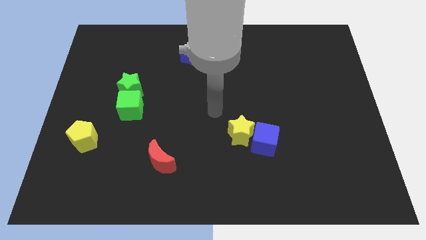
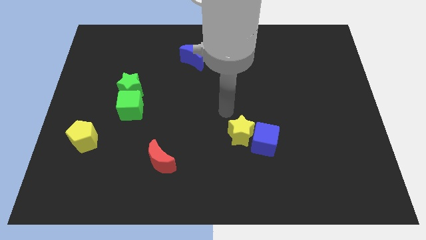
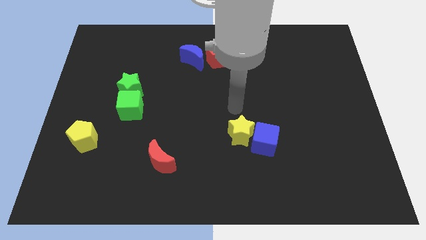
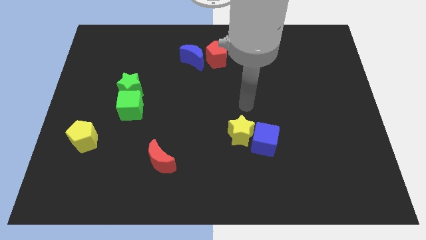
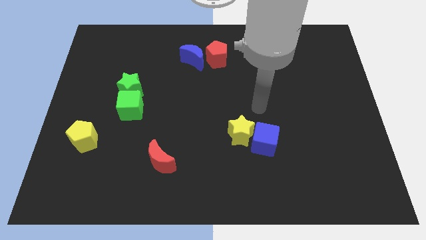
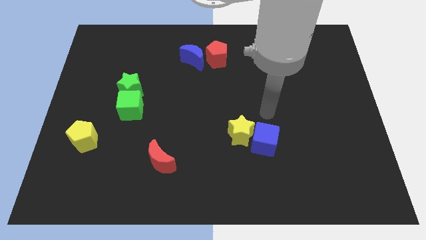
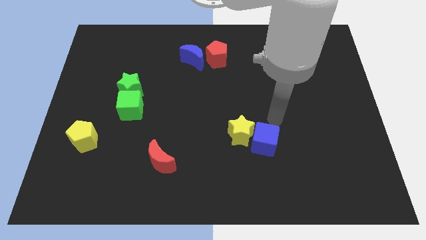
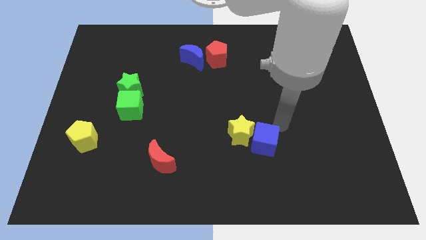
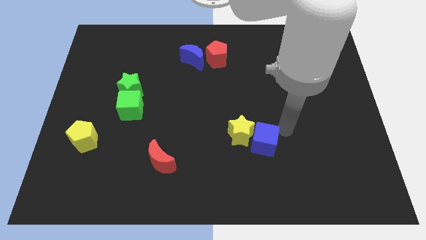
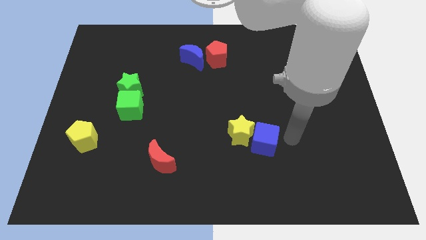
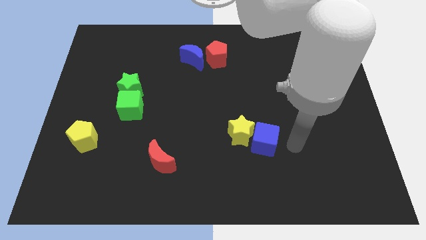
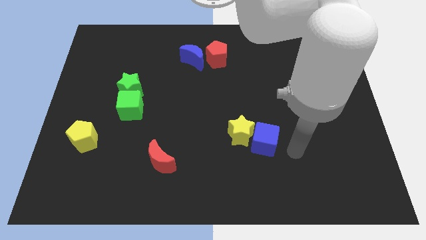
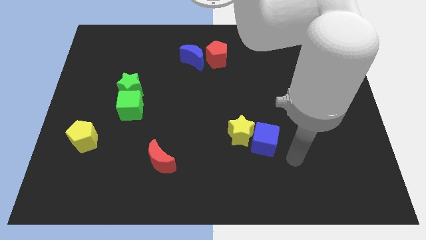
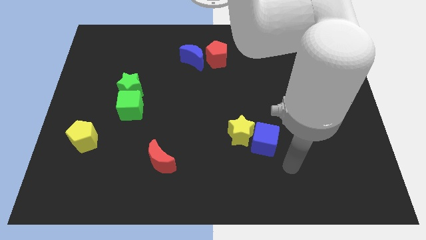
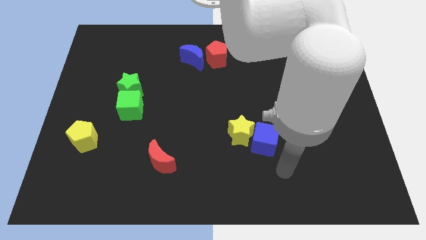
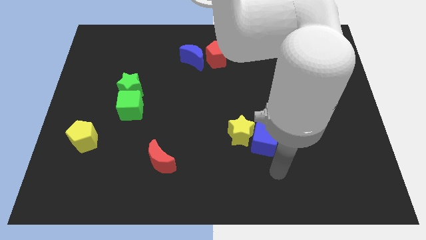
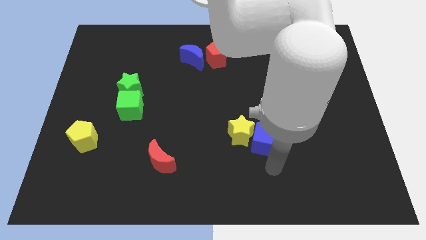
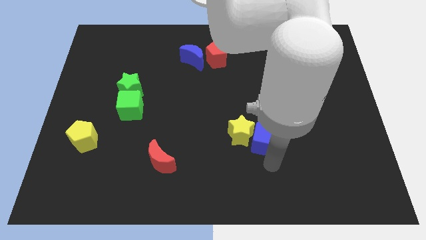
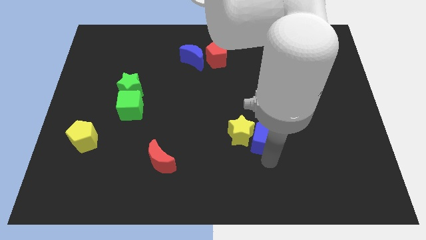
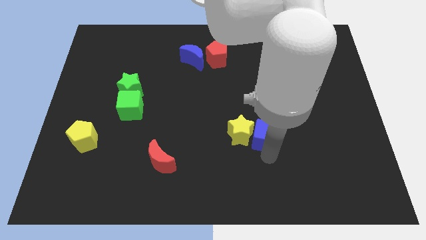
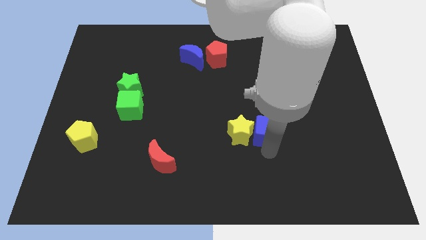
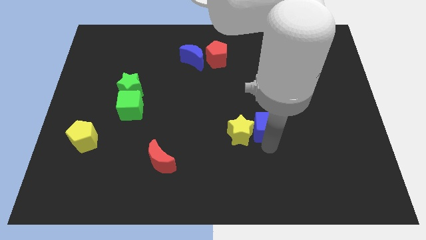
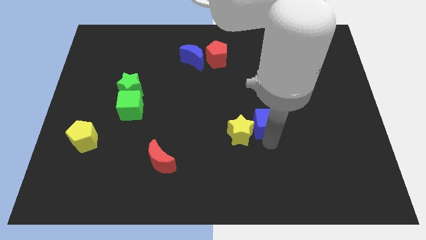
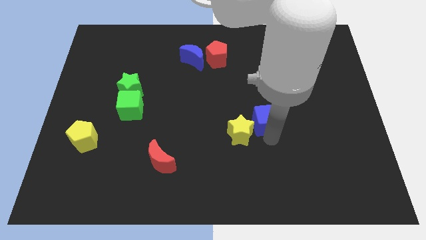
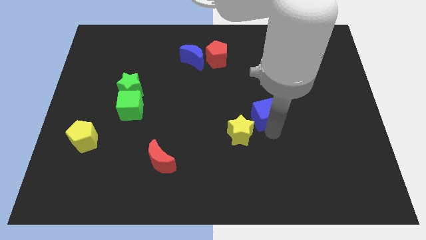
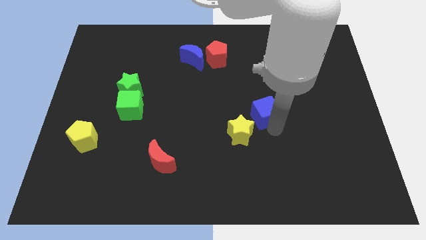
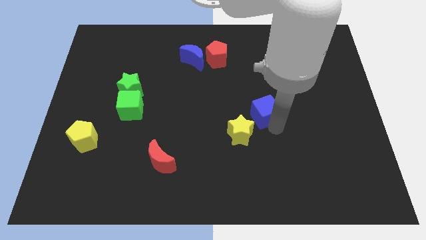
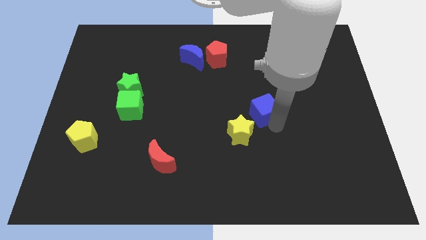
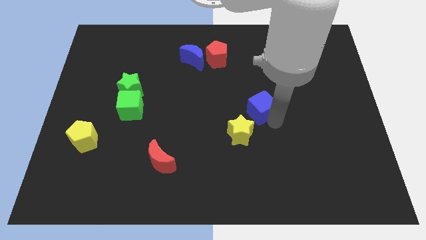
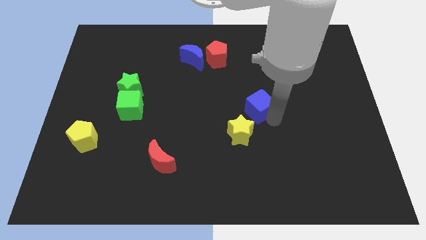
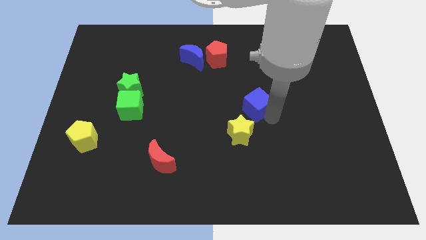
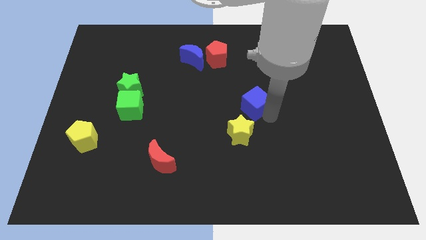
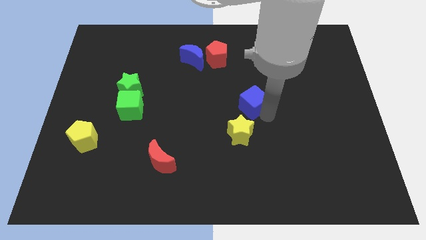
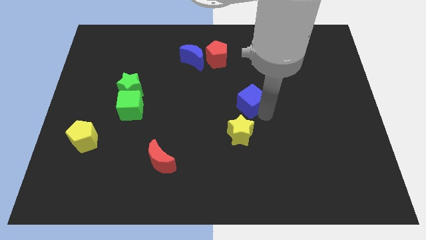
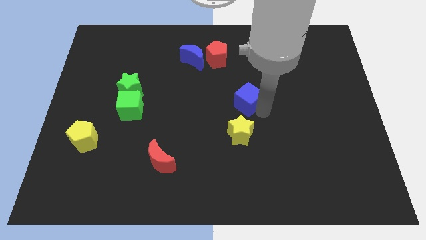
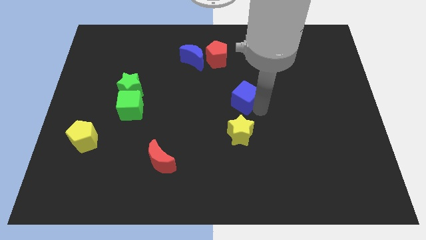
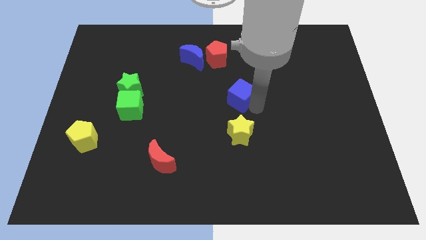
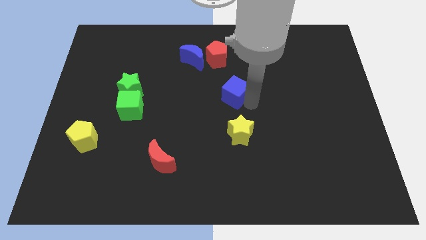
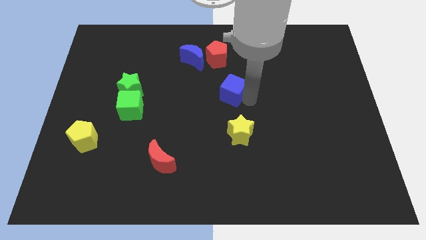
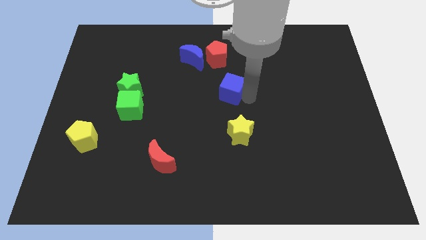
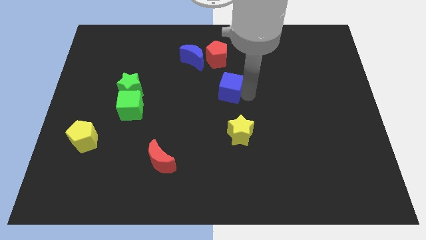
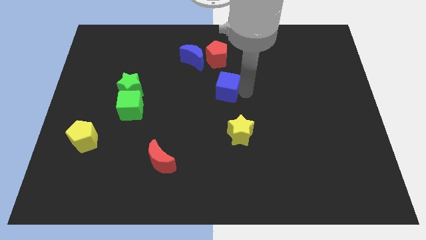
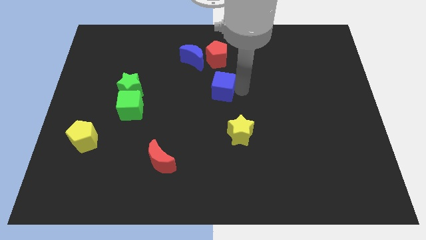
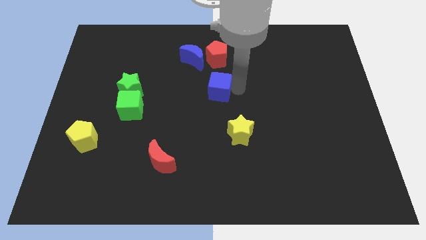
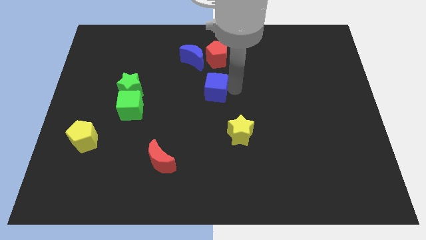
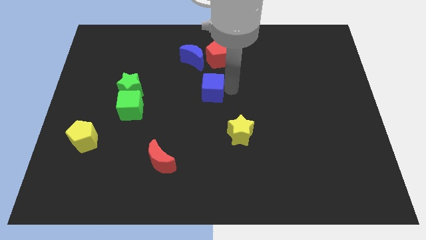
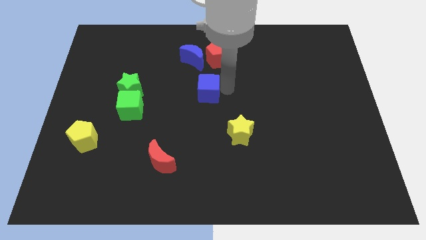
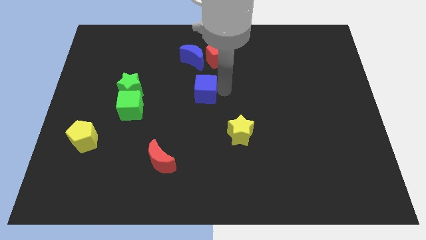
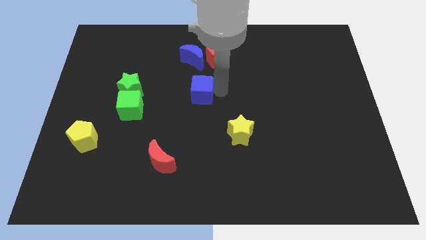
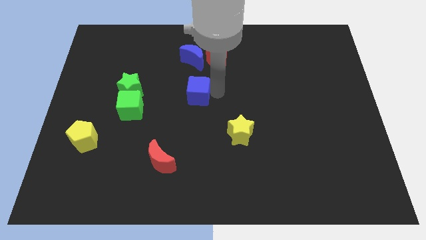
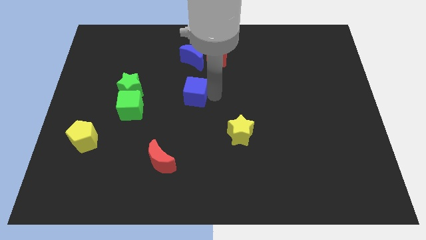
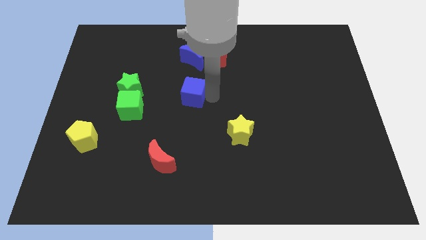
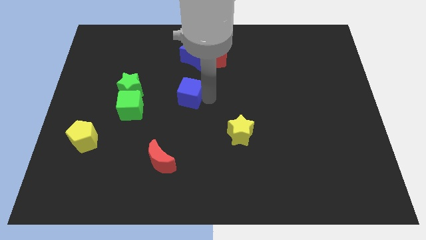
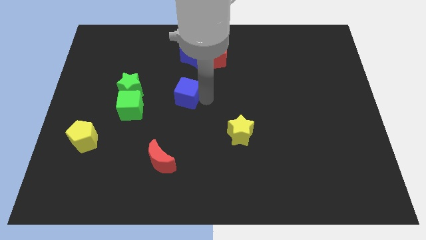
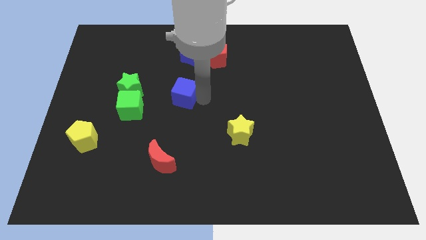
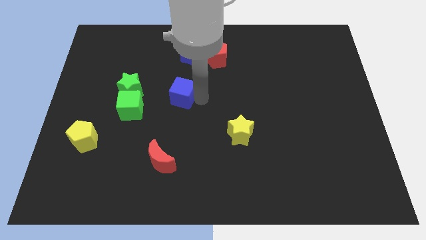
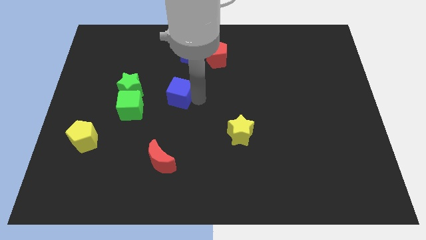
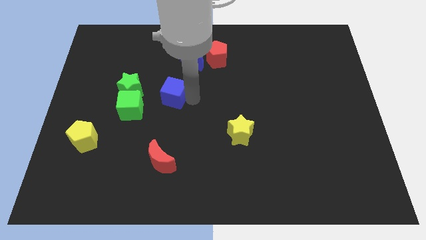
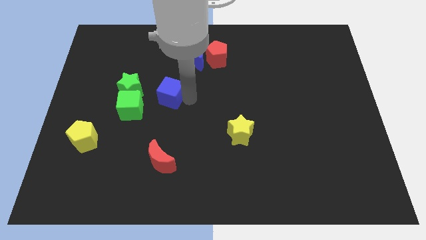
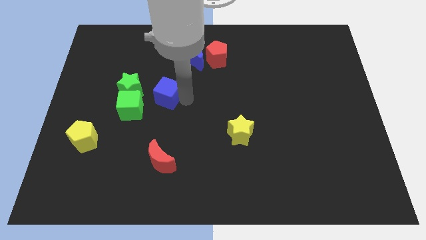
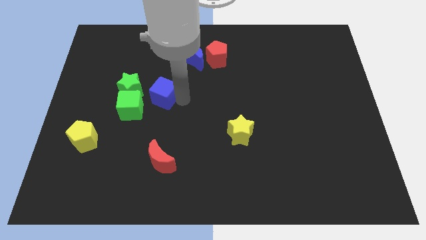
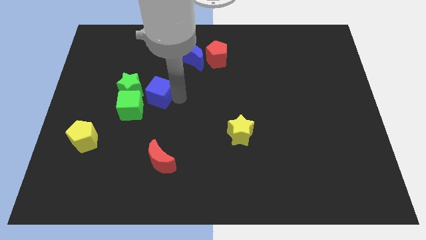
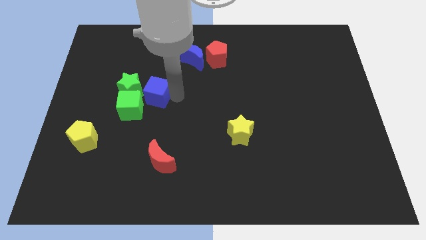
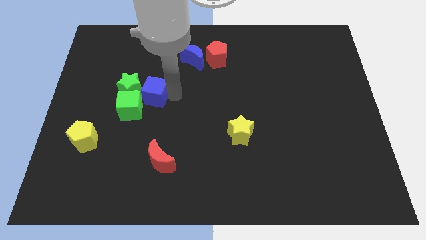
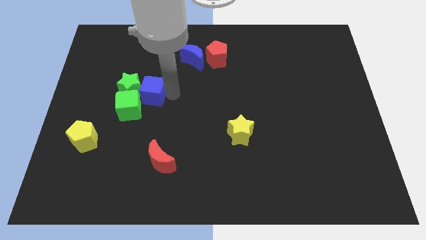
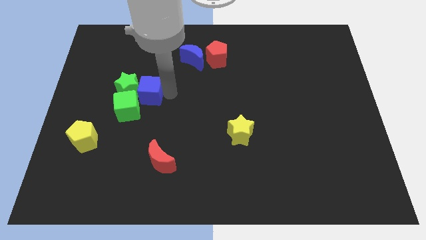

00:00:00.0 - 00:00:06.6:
move the blue cube next to the green star

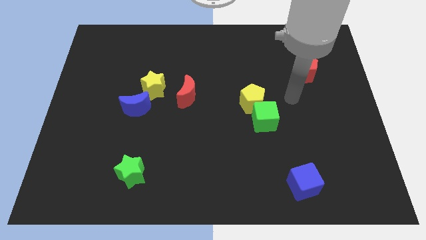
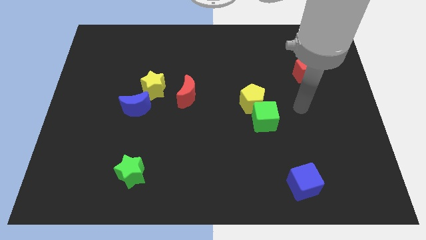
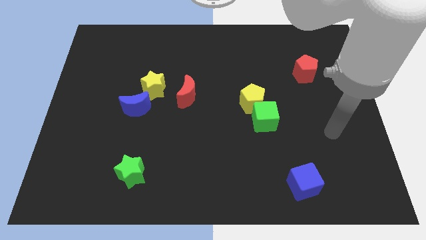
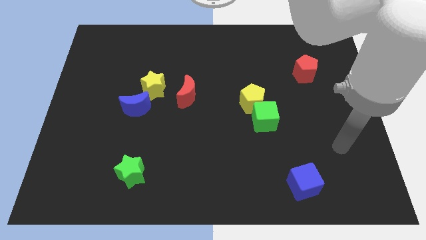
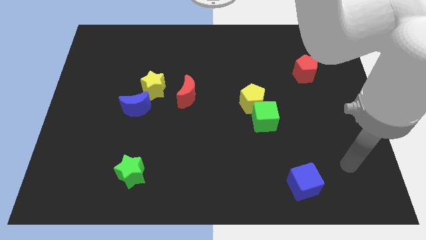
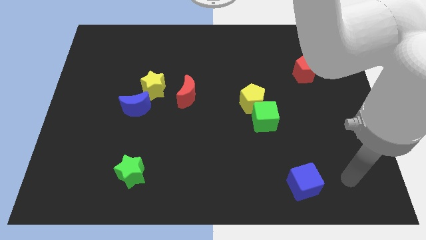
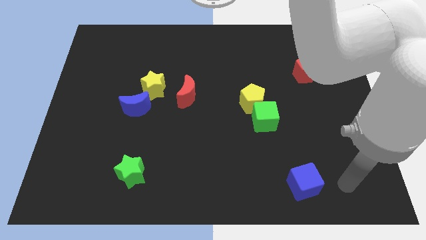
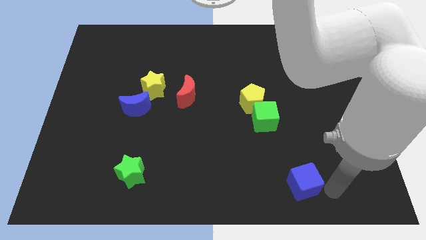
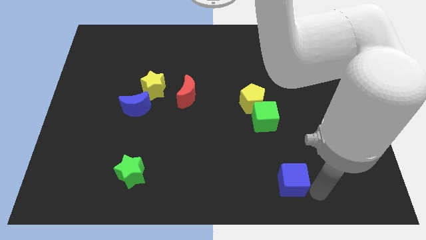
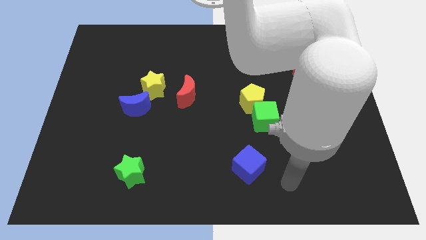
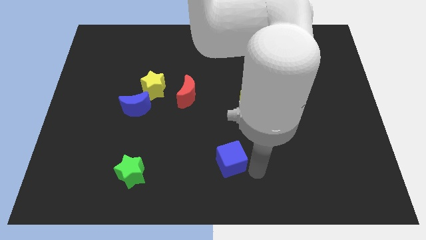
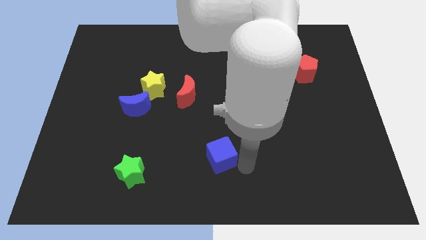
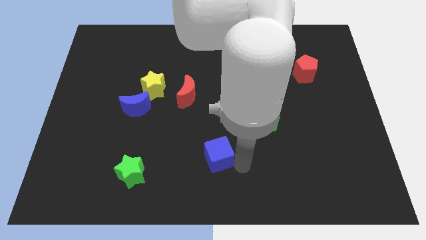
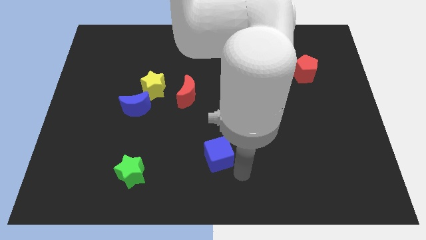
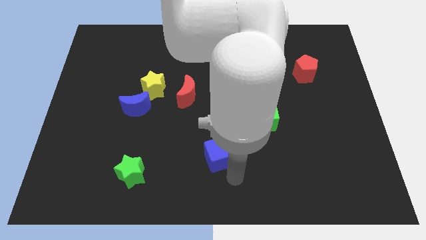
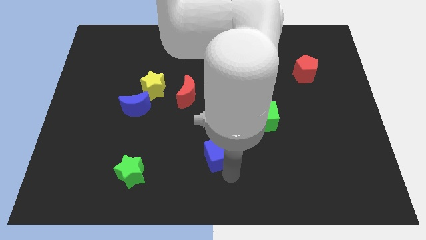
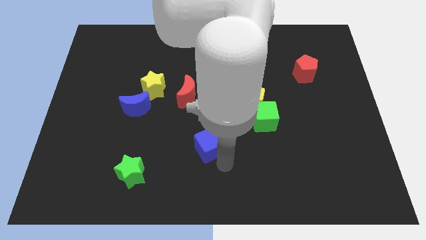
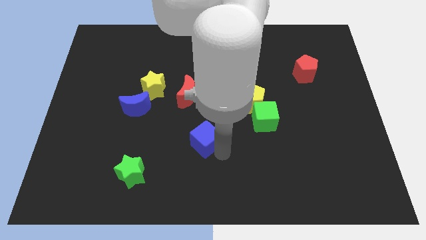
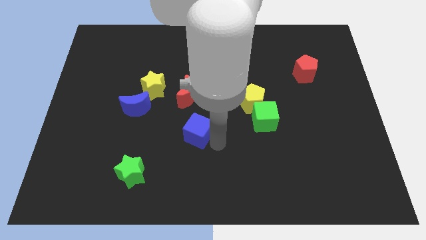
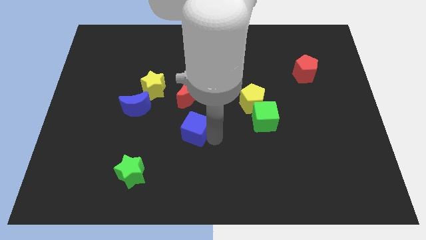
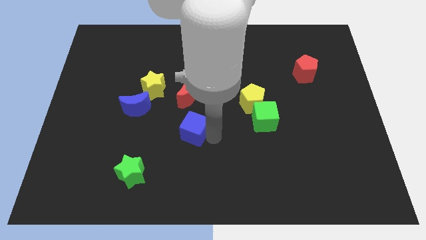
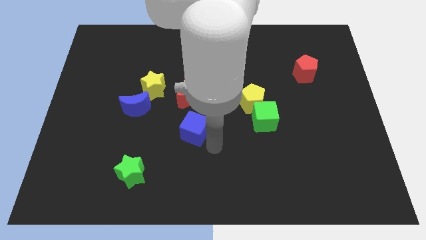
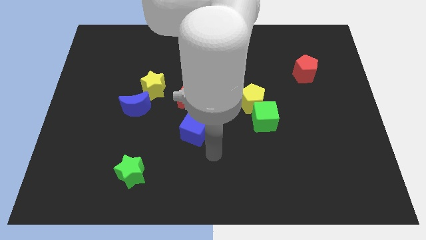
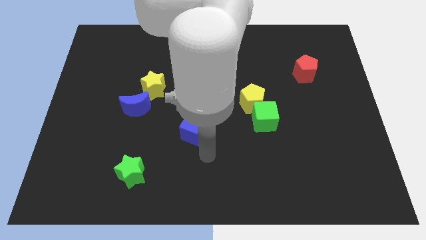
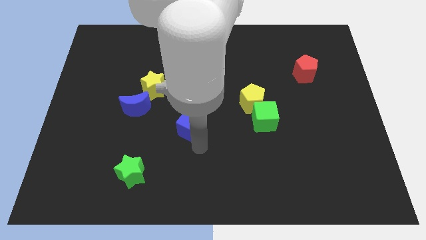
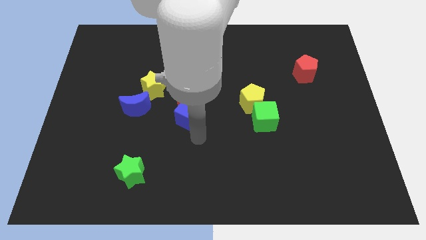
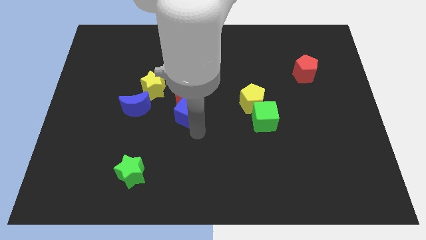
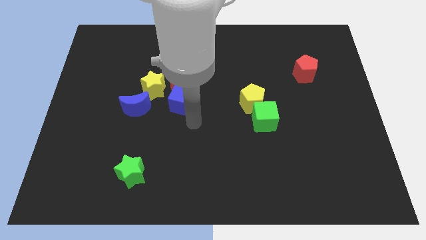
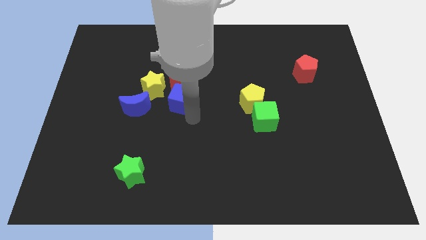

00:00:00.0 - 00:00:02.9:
put the blue cube close to the red moon
